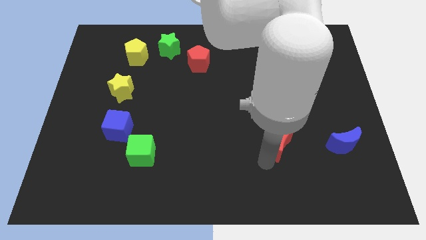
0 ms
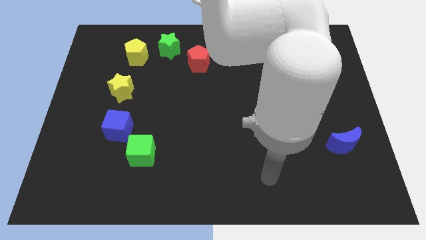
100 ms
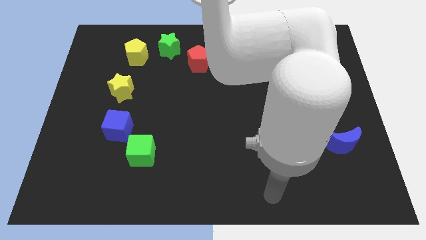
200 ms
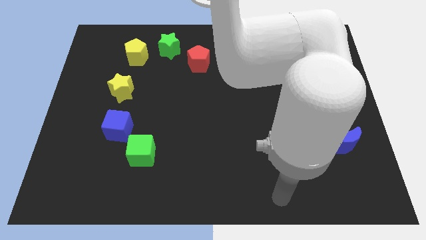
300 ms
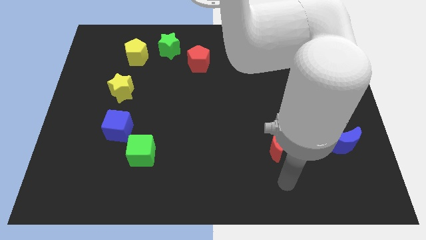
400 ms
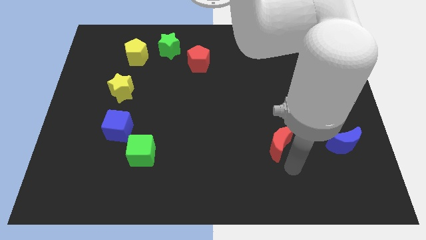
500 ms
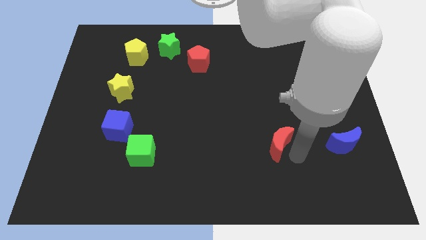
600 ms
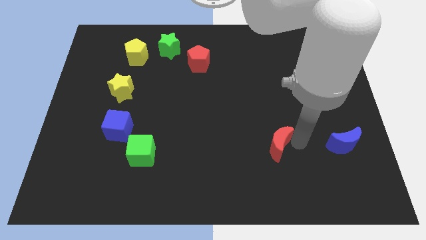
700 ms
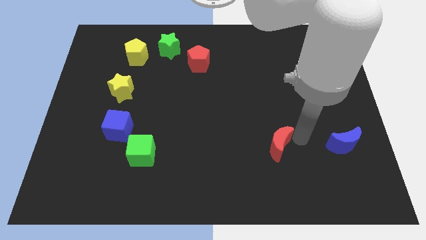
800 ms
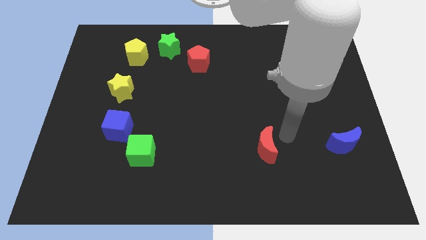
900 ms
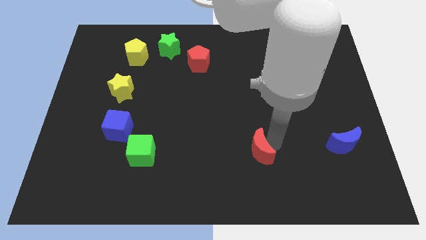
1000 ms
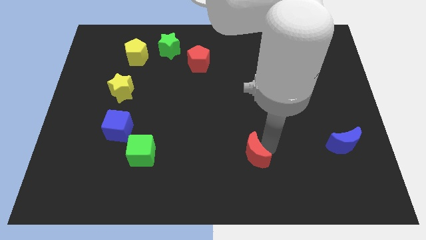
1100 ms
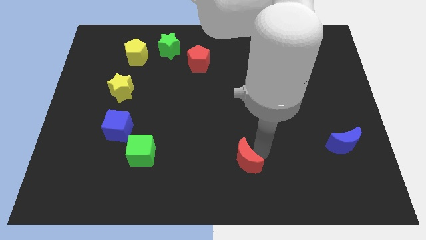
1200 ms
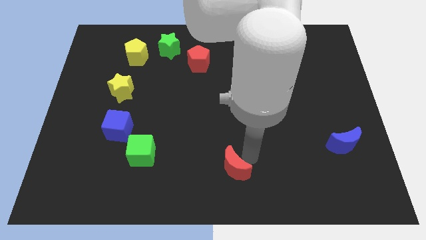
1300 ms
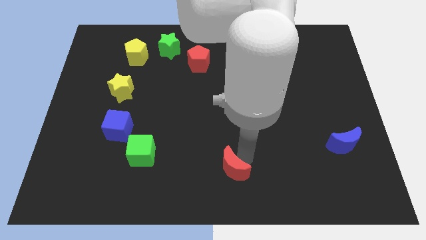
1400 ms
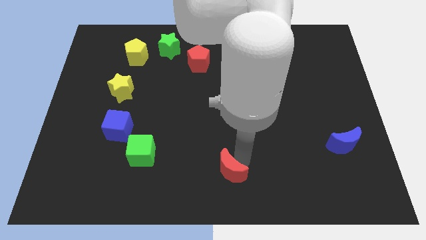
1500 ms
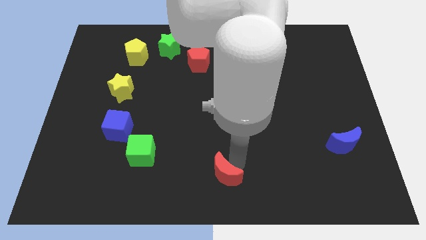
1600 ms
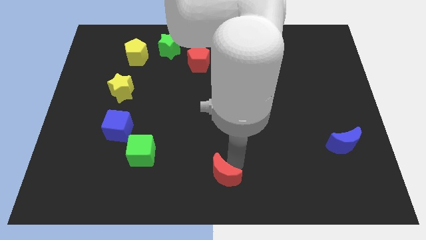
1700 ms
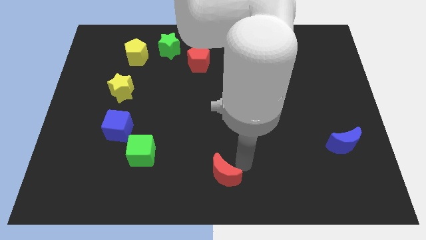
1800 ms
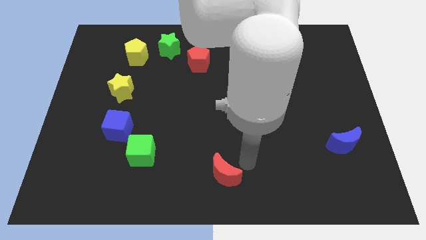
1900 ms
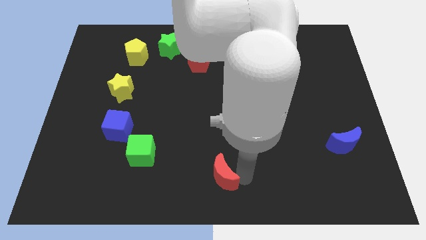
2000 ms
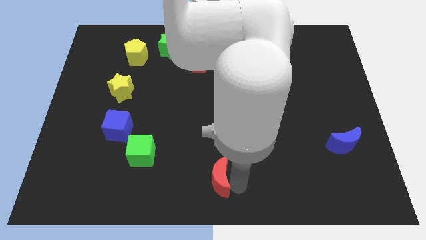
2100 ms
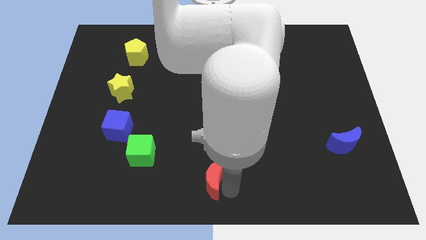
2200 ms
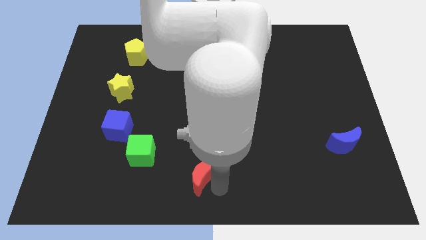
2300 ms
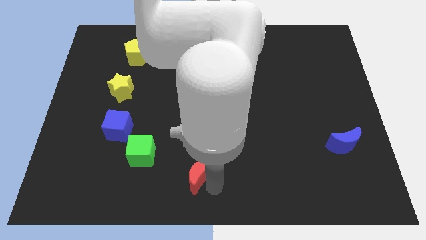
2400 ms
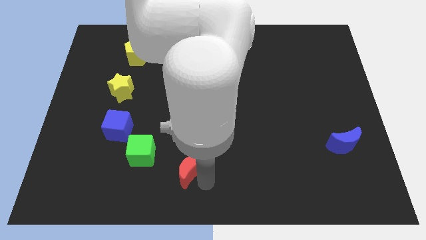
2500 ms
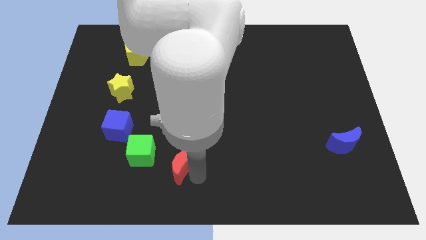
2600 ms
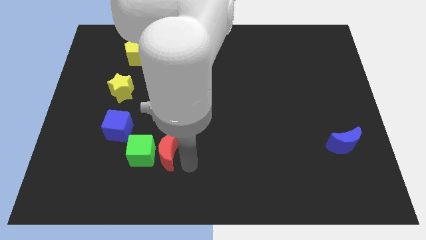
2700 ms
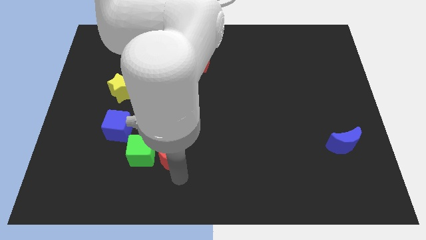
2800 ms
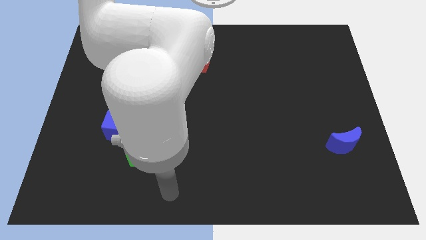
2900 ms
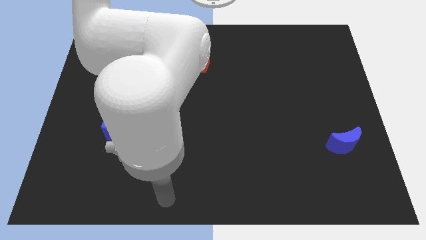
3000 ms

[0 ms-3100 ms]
push the red moon to the right side of the green cube

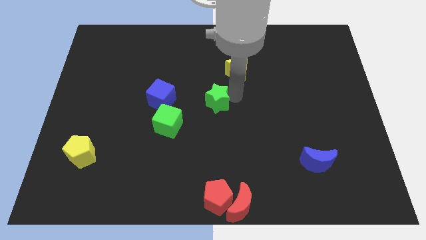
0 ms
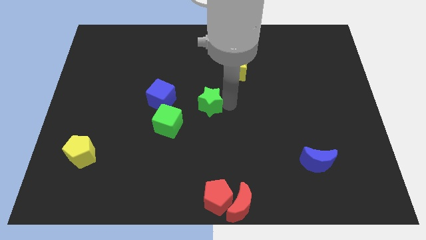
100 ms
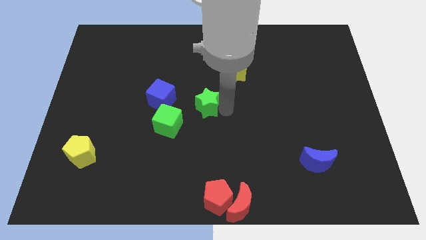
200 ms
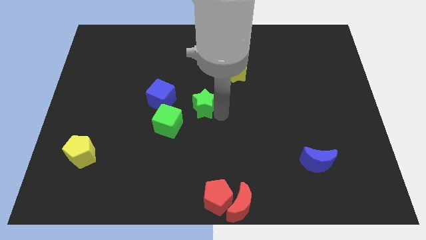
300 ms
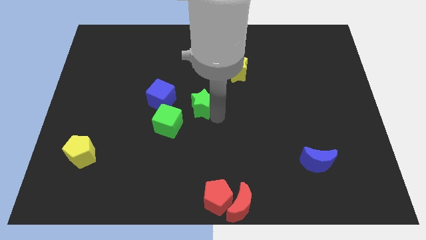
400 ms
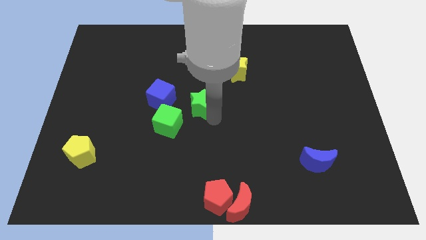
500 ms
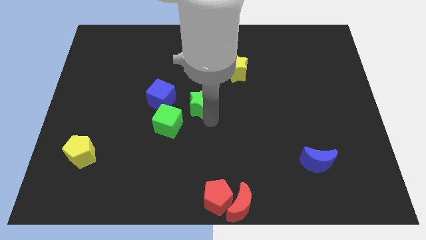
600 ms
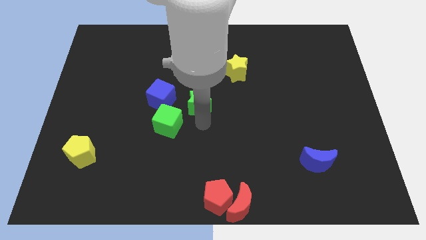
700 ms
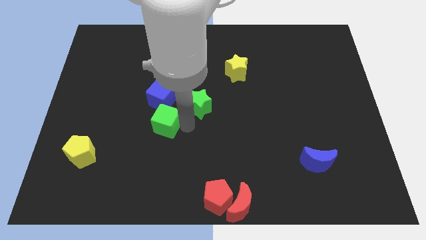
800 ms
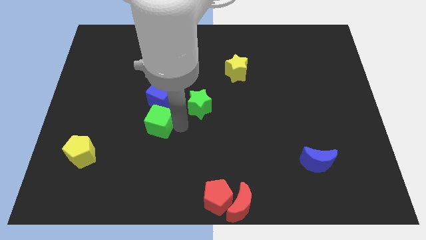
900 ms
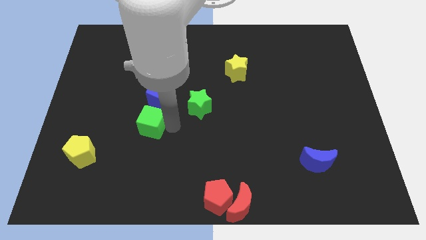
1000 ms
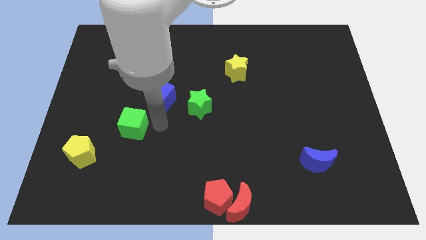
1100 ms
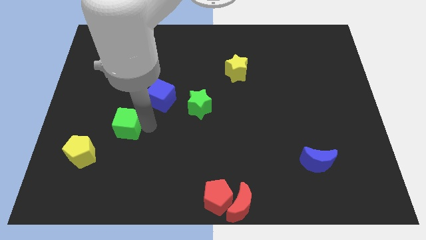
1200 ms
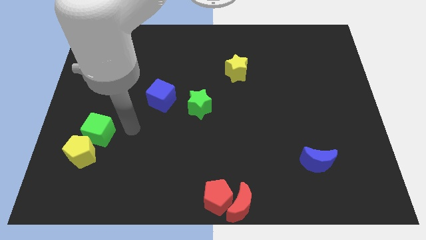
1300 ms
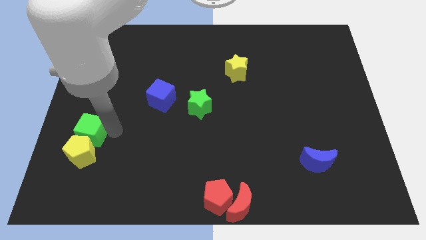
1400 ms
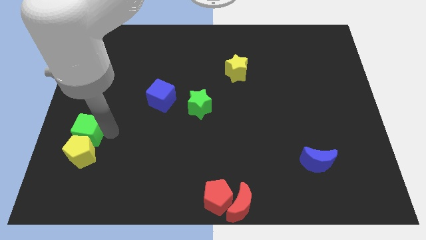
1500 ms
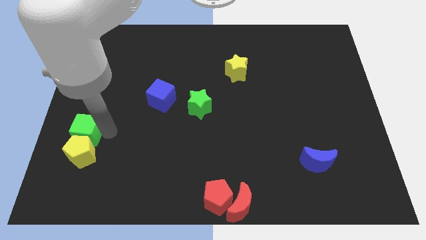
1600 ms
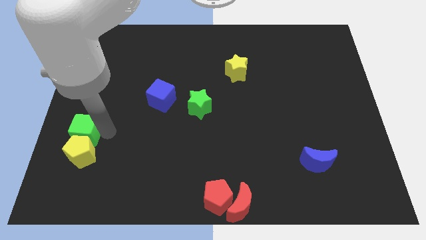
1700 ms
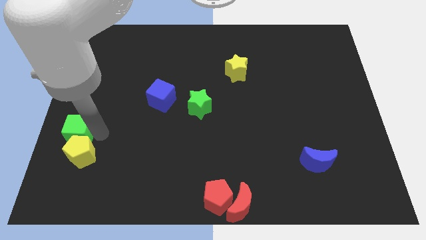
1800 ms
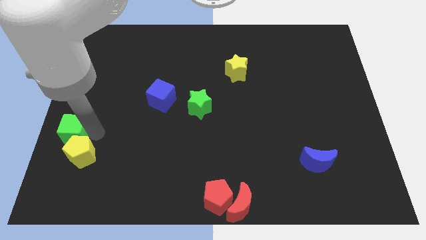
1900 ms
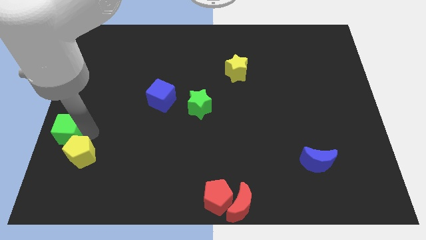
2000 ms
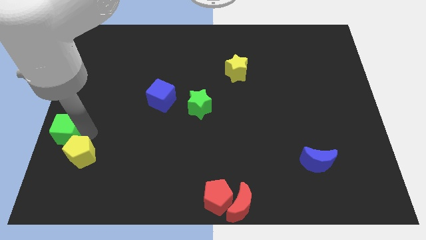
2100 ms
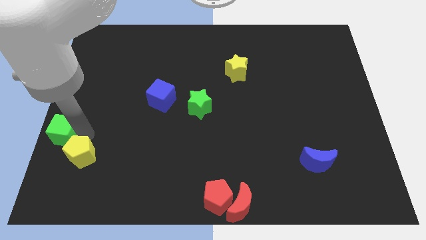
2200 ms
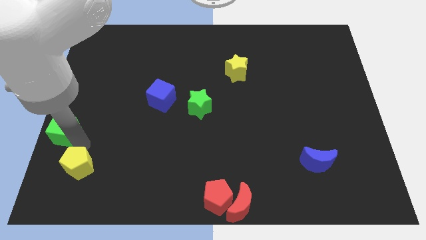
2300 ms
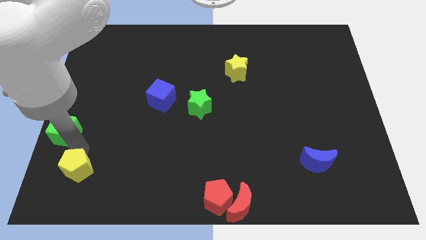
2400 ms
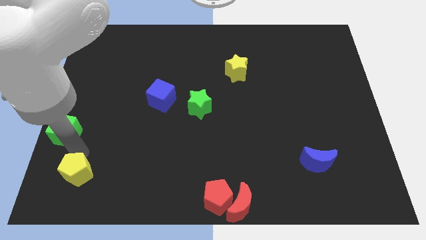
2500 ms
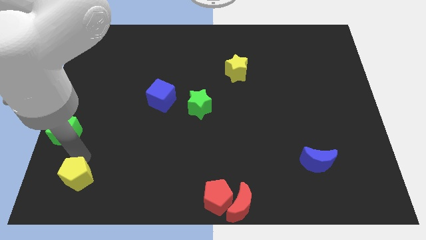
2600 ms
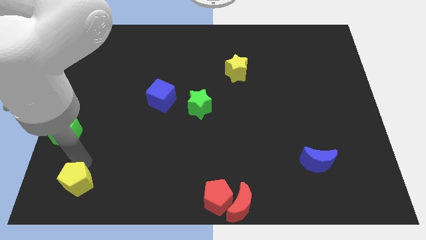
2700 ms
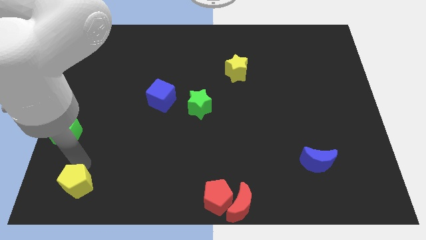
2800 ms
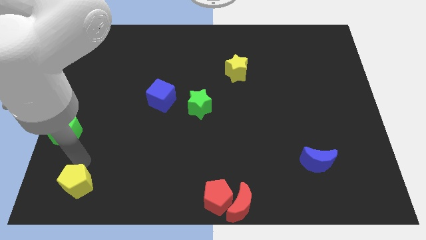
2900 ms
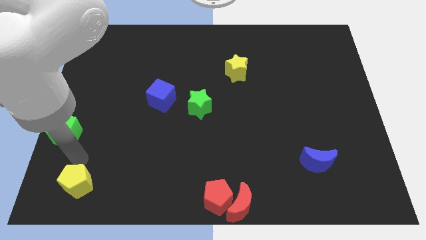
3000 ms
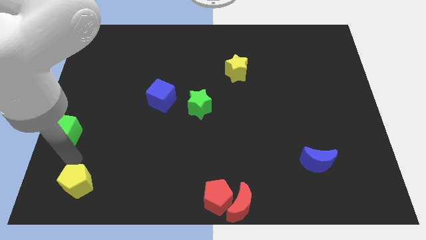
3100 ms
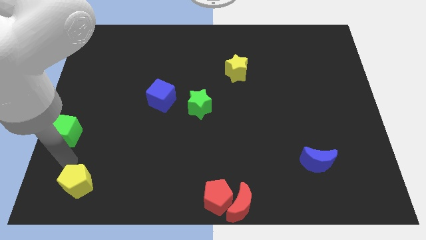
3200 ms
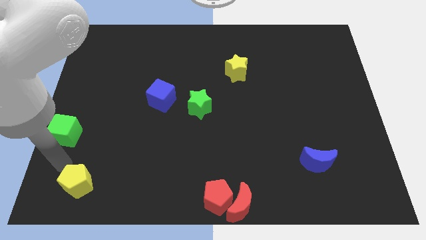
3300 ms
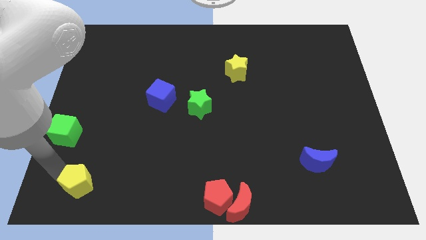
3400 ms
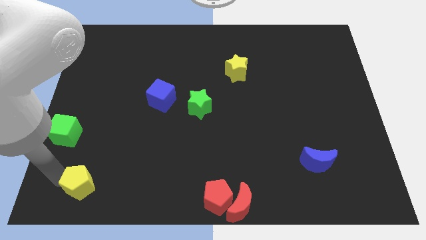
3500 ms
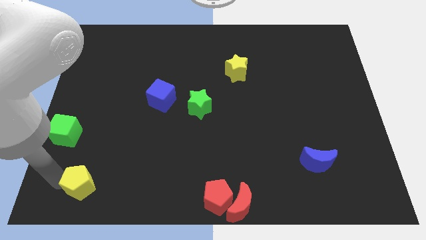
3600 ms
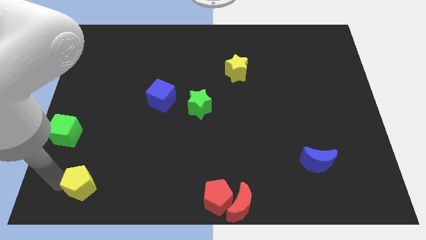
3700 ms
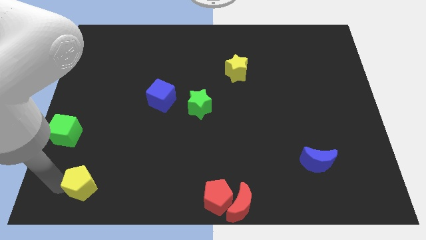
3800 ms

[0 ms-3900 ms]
separate the green cube and yellow pentagon

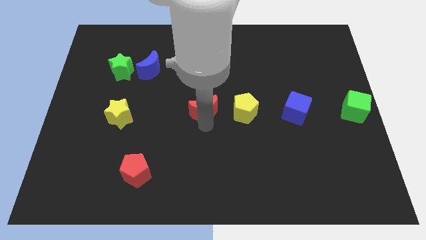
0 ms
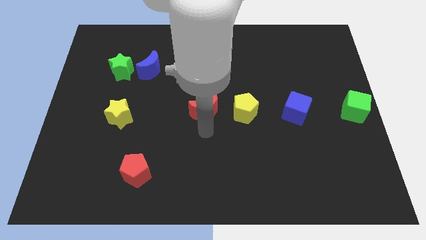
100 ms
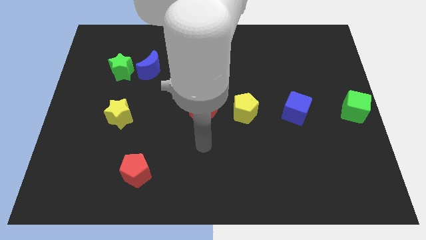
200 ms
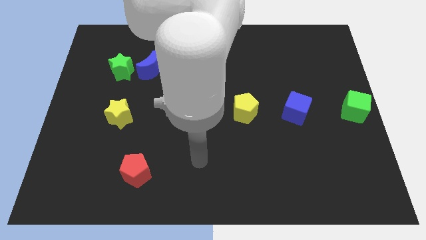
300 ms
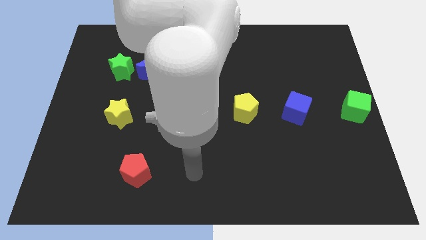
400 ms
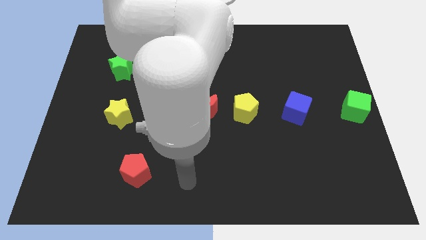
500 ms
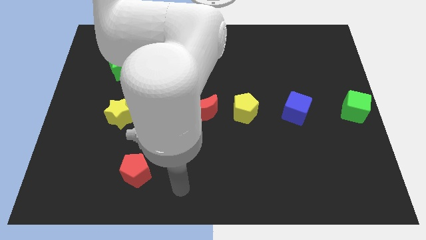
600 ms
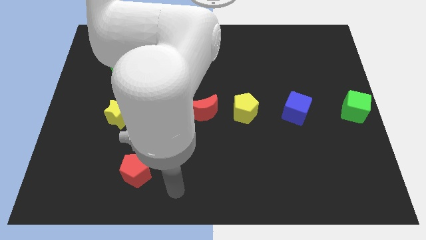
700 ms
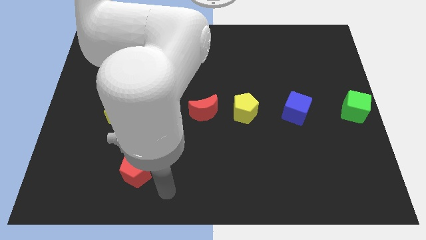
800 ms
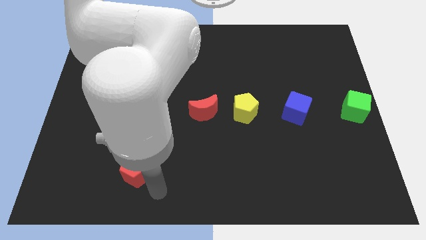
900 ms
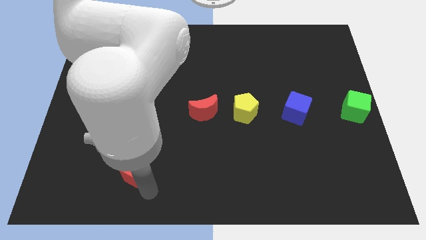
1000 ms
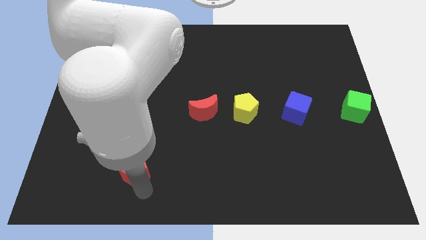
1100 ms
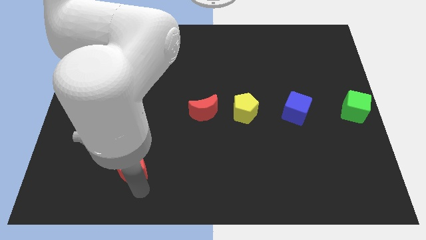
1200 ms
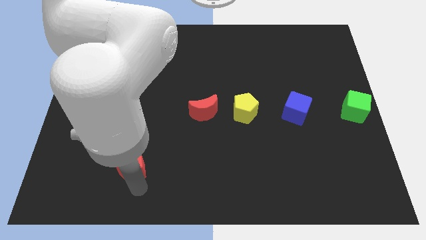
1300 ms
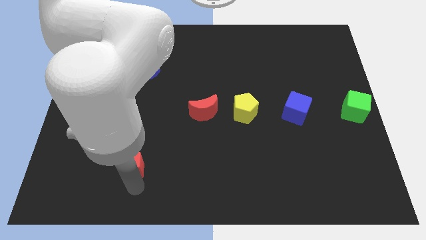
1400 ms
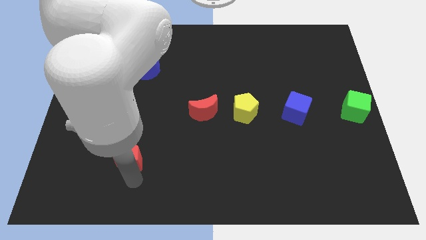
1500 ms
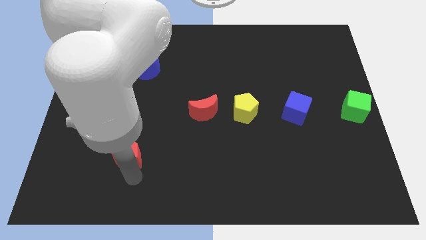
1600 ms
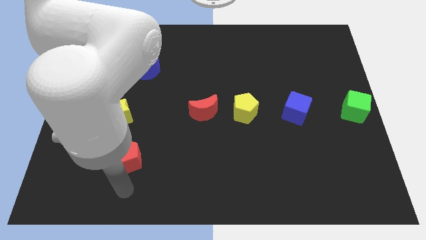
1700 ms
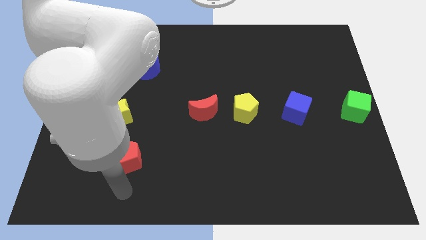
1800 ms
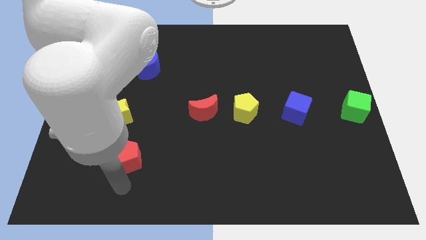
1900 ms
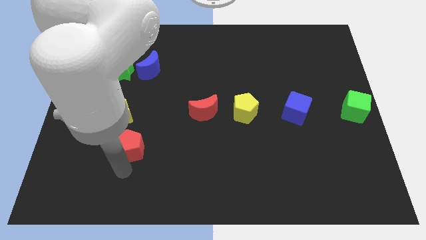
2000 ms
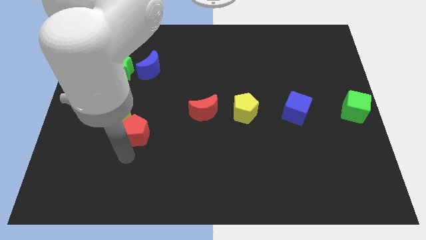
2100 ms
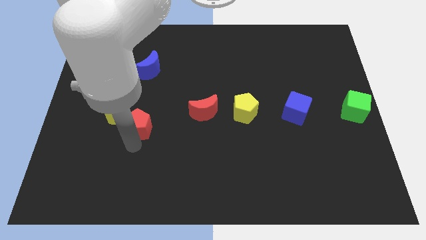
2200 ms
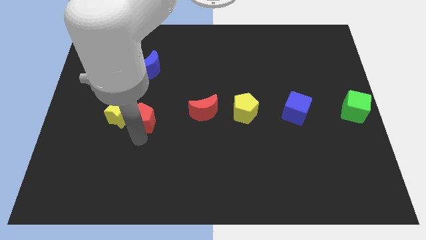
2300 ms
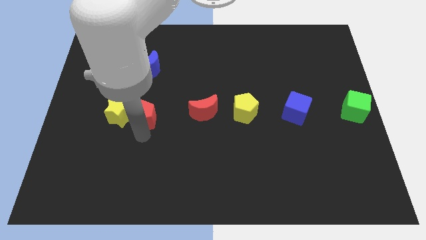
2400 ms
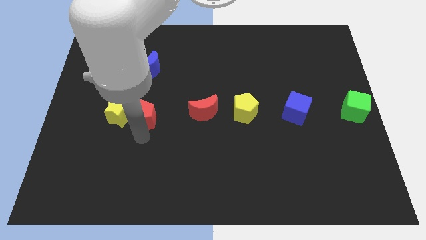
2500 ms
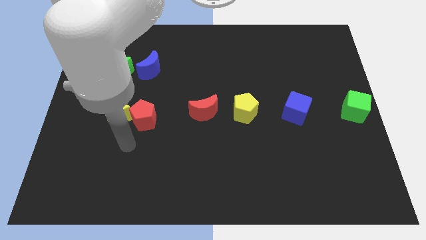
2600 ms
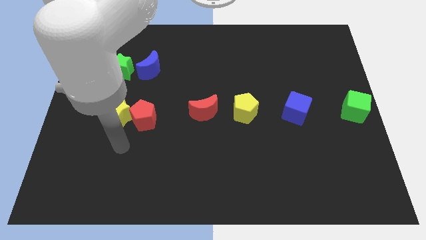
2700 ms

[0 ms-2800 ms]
push the red pentagon to the right of the yellow star
